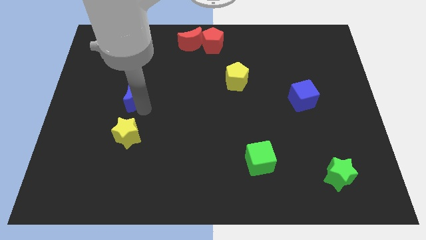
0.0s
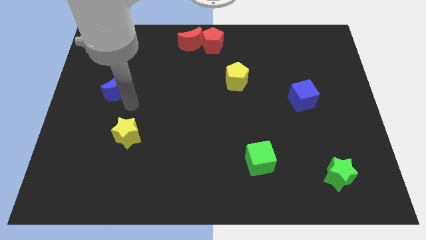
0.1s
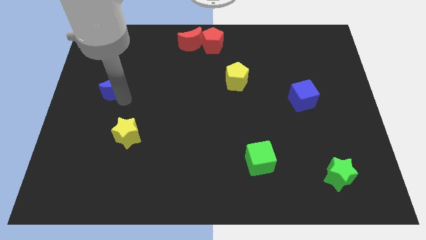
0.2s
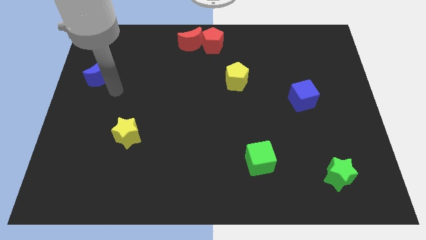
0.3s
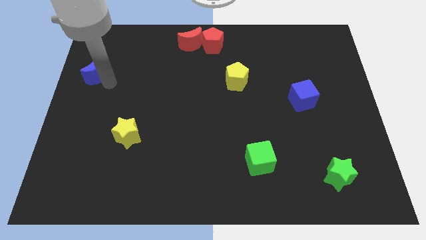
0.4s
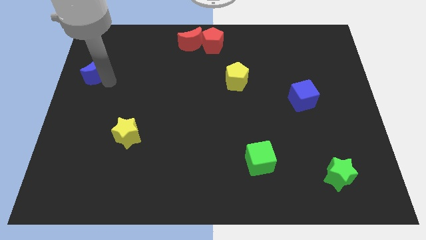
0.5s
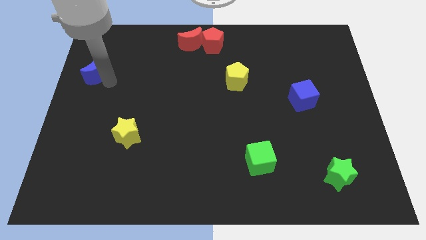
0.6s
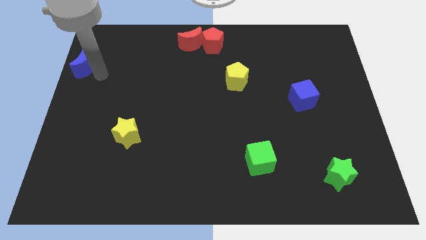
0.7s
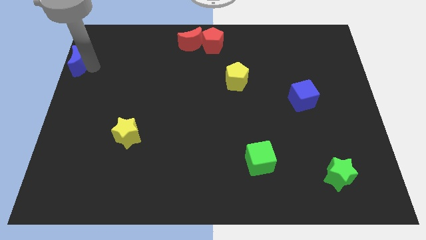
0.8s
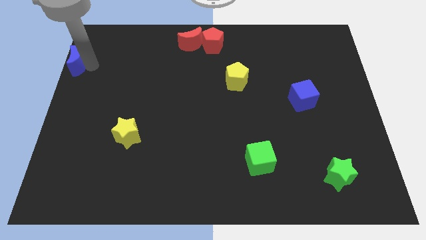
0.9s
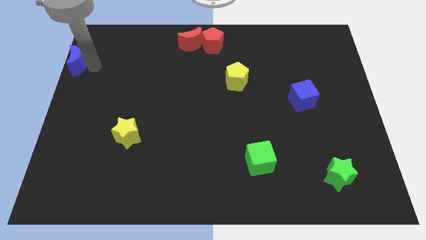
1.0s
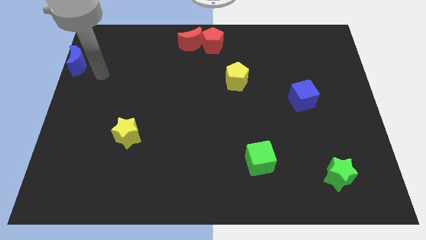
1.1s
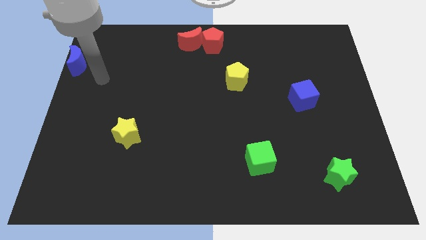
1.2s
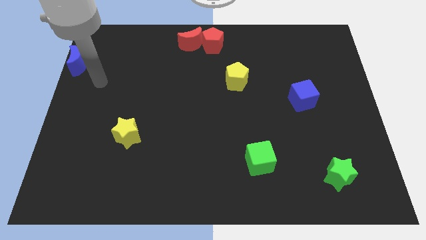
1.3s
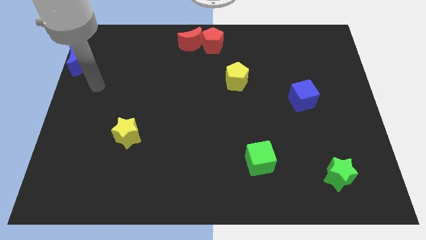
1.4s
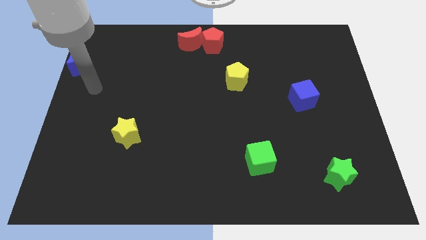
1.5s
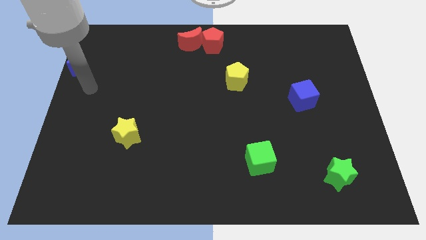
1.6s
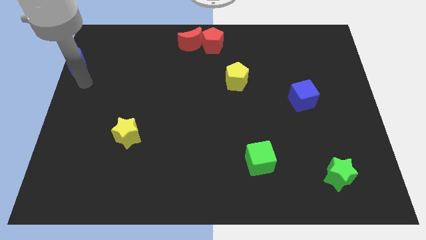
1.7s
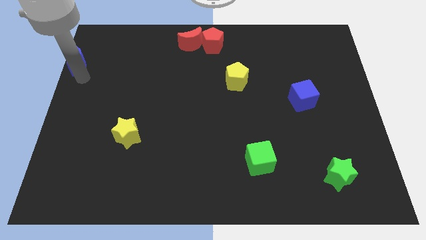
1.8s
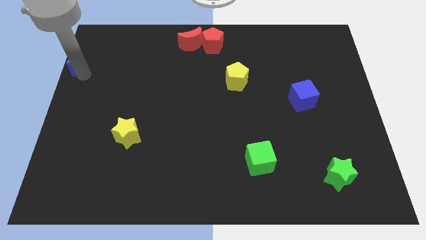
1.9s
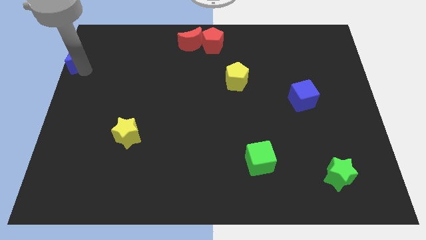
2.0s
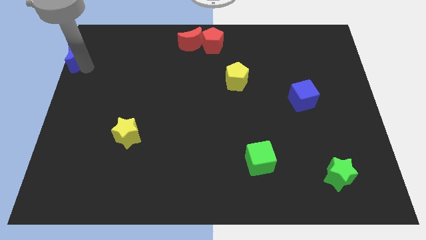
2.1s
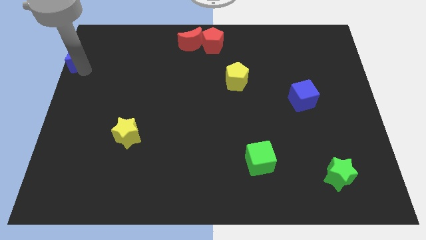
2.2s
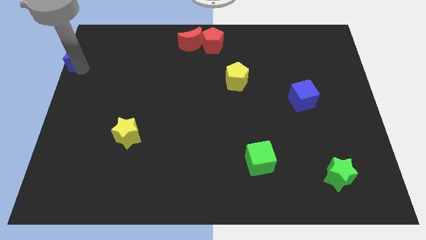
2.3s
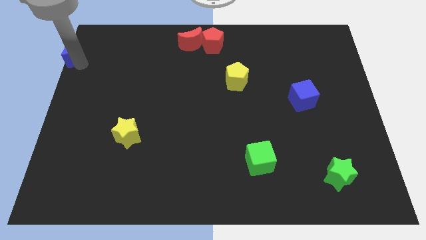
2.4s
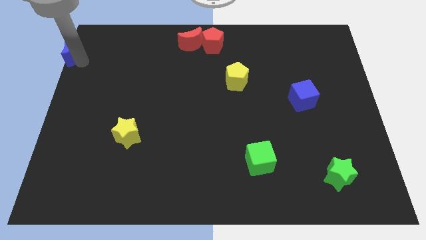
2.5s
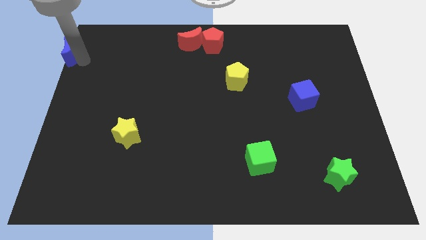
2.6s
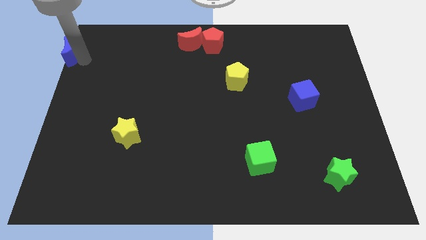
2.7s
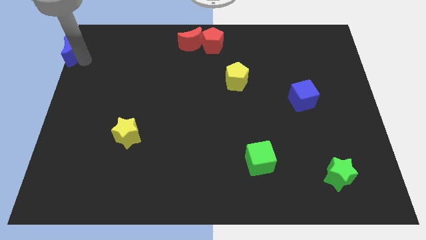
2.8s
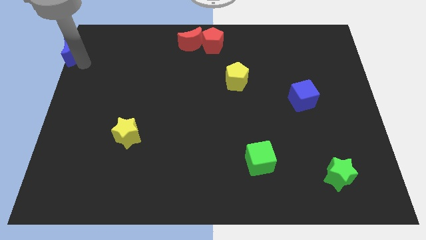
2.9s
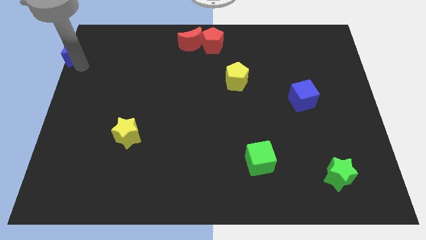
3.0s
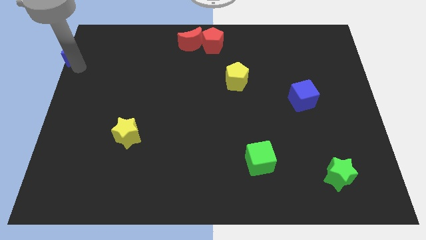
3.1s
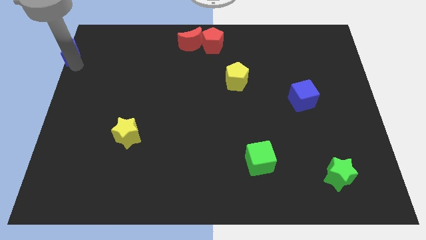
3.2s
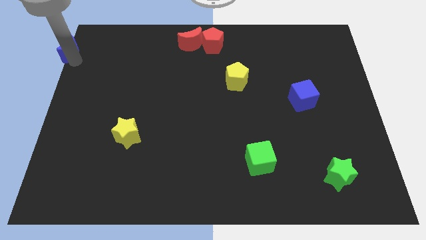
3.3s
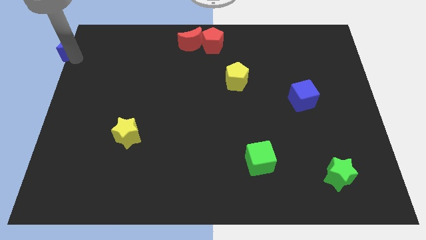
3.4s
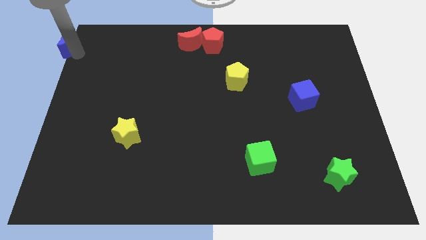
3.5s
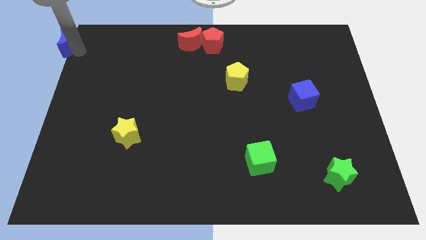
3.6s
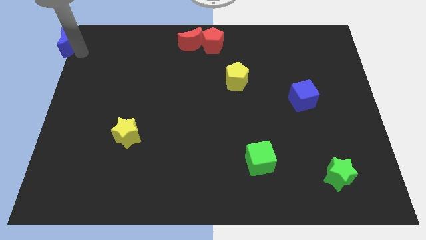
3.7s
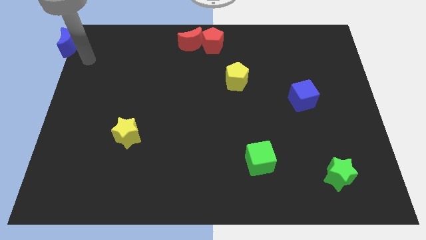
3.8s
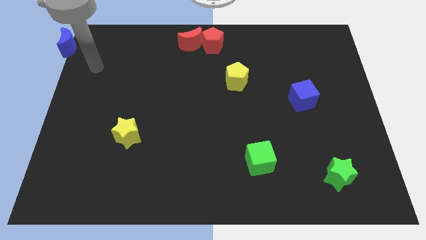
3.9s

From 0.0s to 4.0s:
place the blue moon to the top left corner of the board

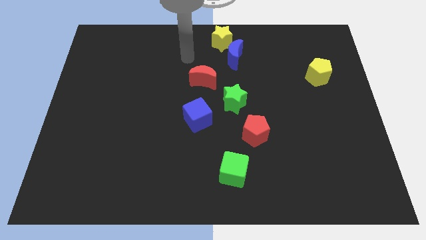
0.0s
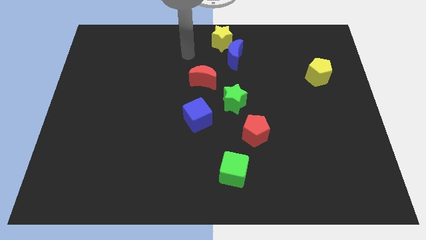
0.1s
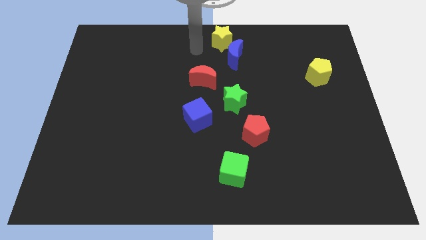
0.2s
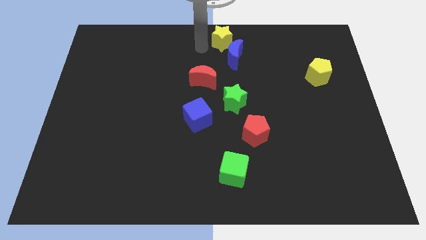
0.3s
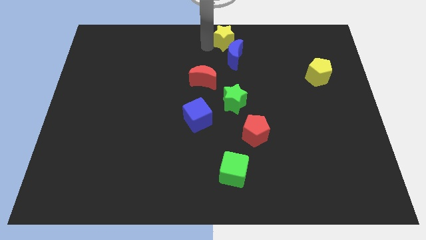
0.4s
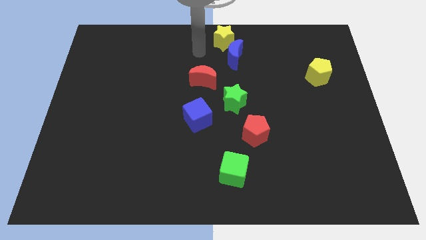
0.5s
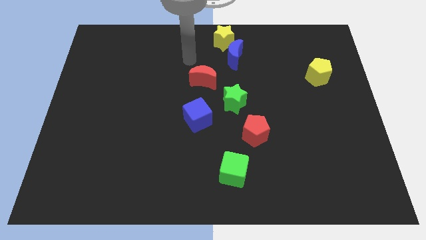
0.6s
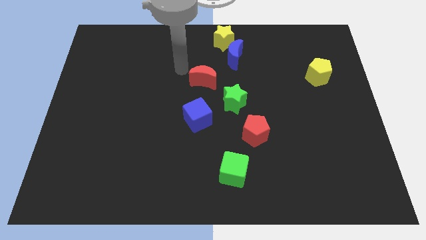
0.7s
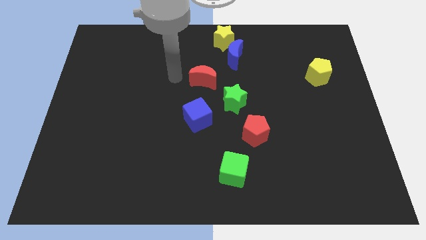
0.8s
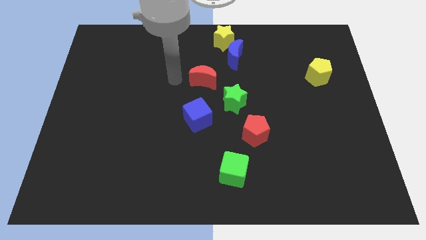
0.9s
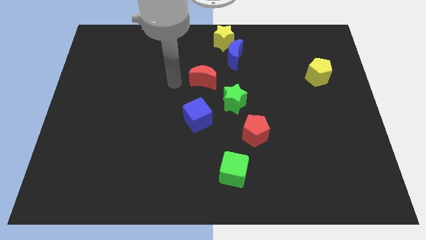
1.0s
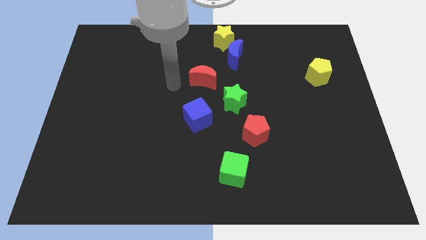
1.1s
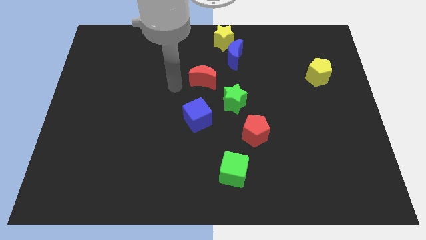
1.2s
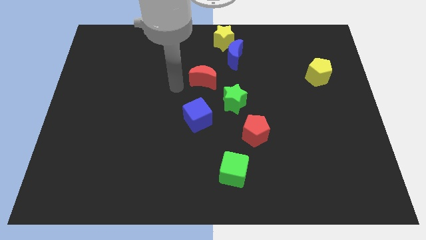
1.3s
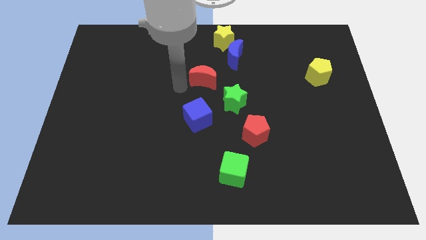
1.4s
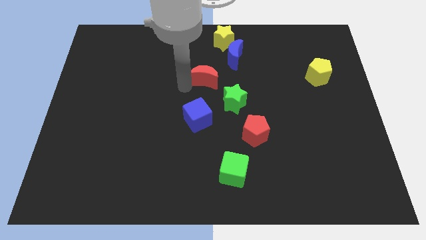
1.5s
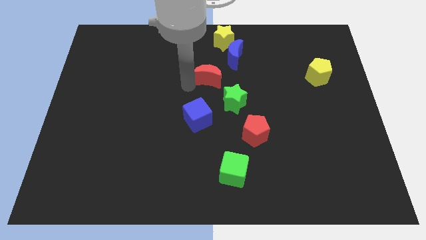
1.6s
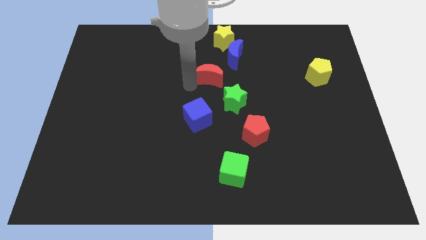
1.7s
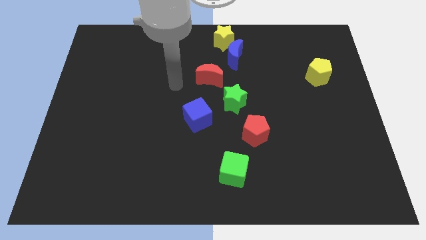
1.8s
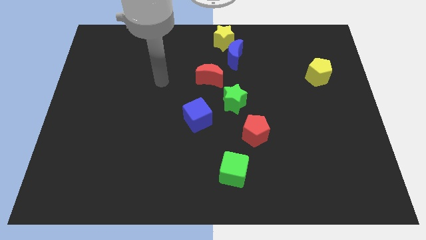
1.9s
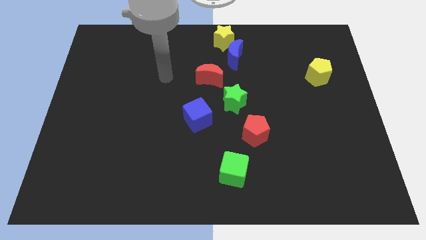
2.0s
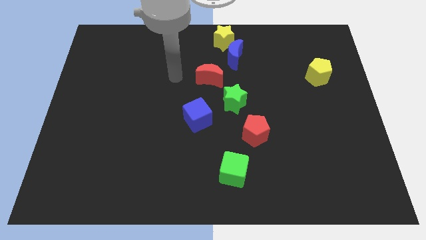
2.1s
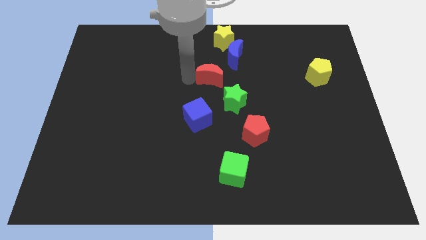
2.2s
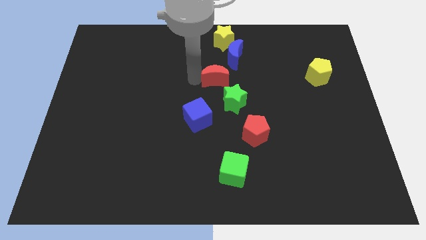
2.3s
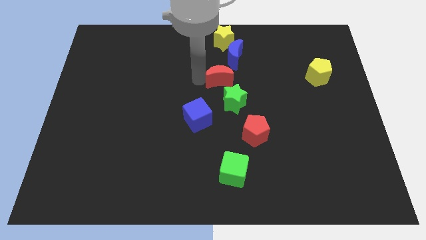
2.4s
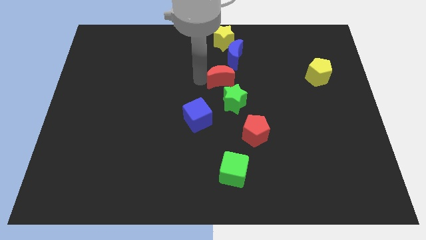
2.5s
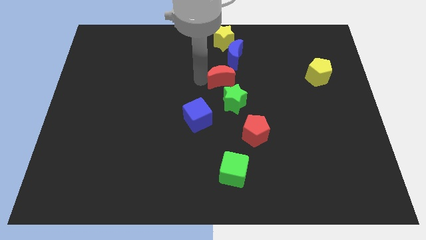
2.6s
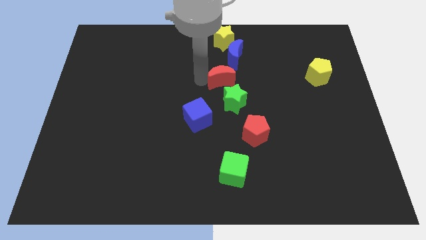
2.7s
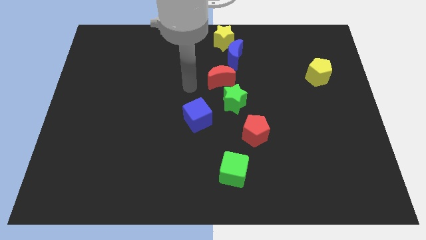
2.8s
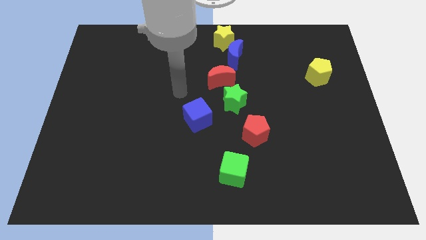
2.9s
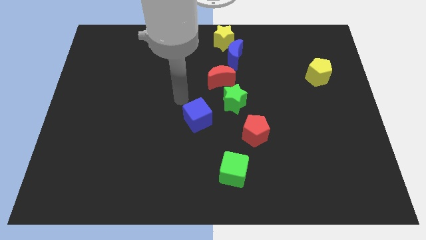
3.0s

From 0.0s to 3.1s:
place red crescent to the left top of the green star

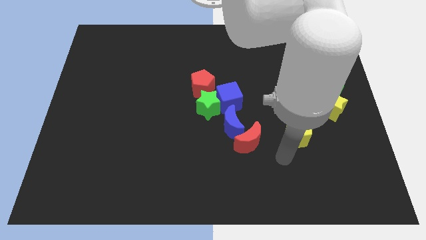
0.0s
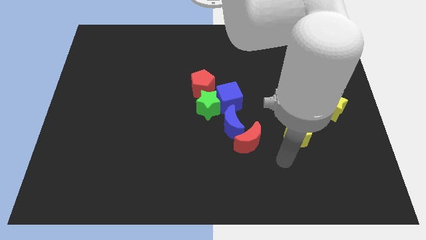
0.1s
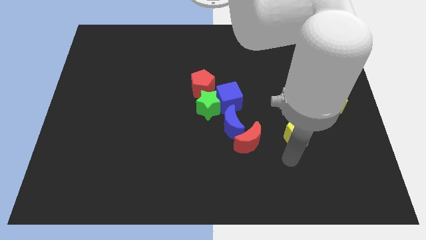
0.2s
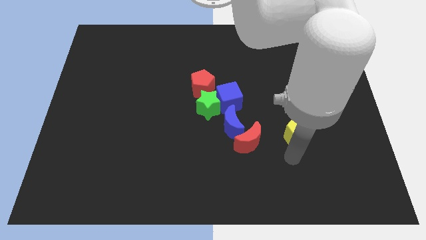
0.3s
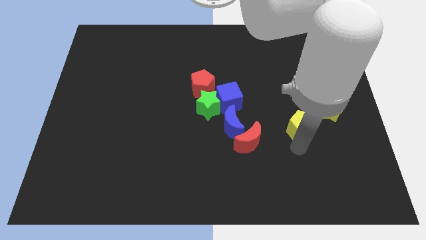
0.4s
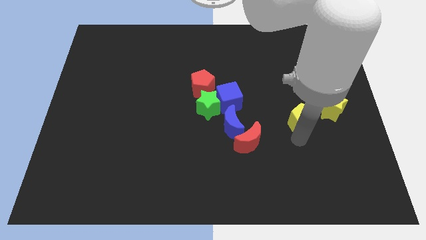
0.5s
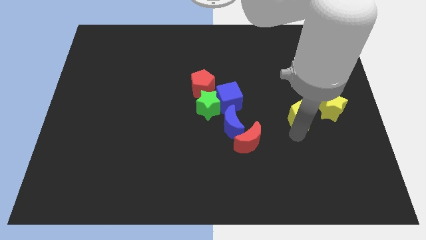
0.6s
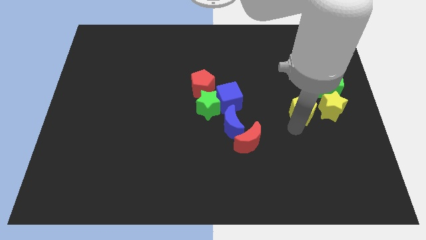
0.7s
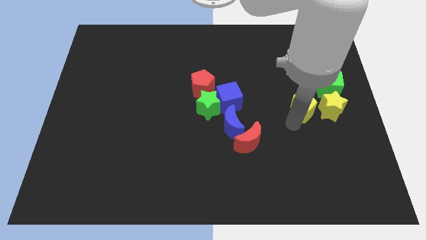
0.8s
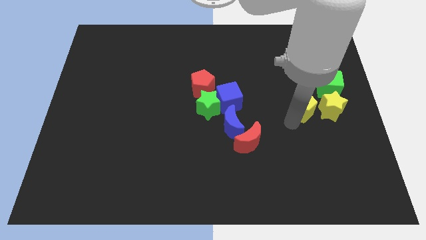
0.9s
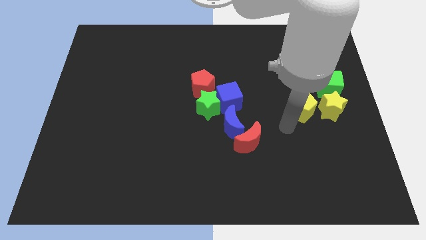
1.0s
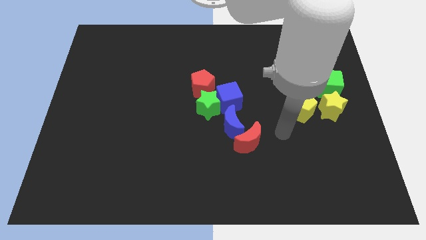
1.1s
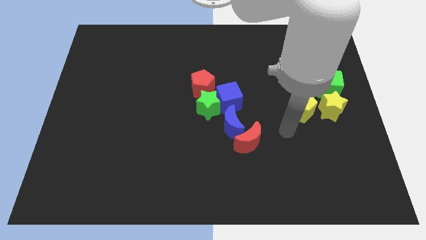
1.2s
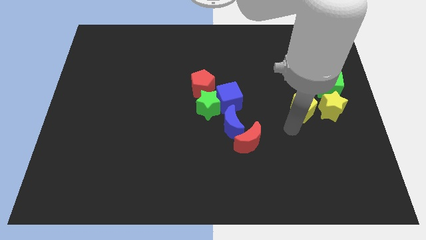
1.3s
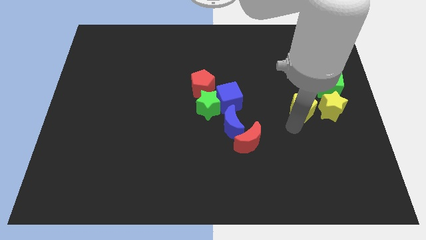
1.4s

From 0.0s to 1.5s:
move the yellow pentagon to the left of the yellow star

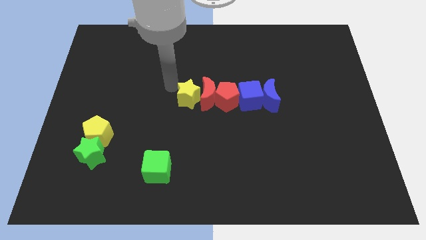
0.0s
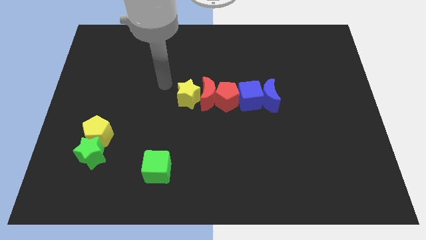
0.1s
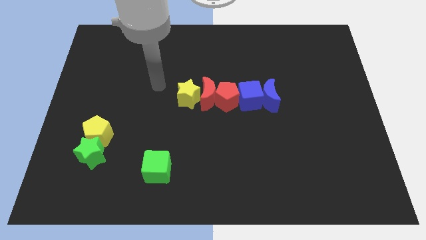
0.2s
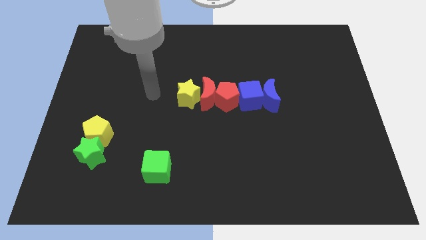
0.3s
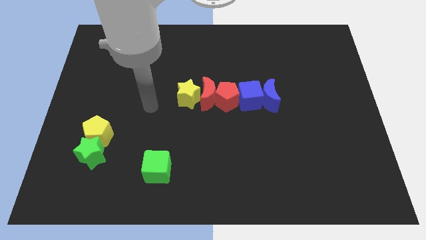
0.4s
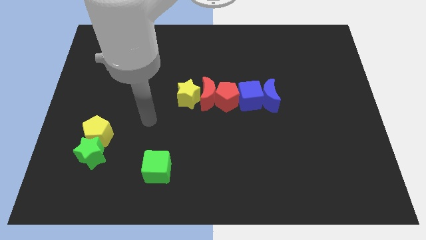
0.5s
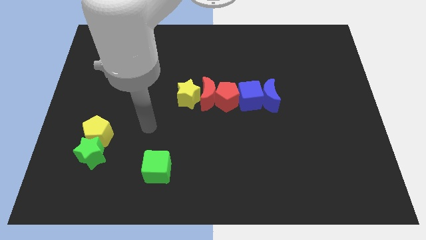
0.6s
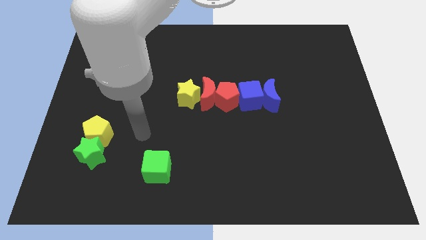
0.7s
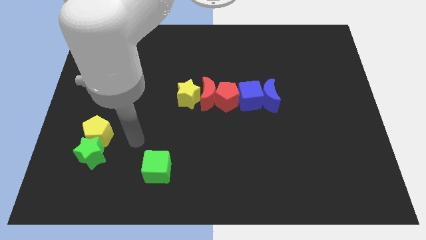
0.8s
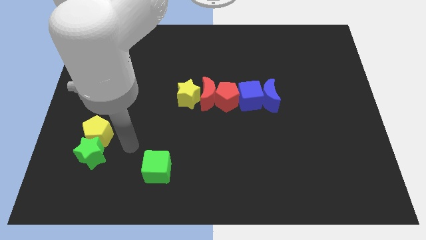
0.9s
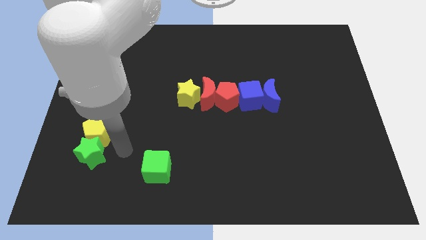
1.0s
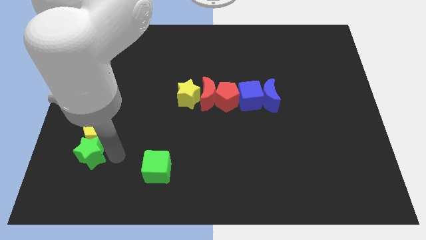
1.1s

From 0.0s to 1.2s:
drag your arm away from the yellow star
